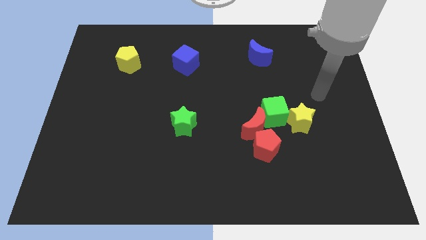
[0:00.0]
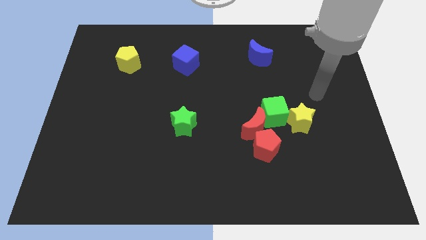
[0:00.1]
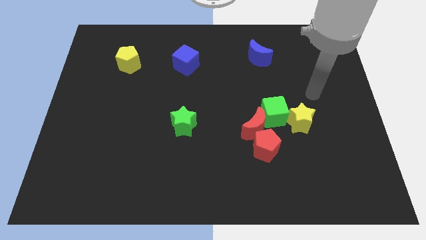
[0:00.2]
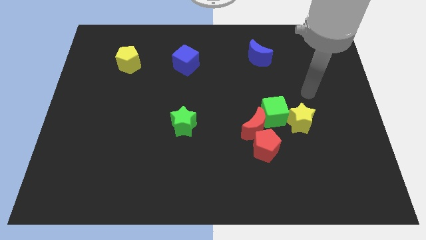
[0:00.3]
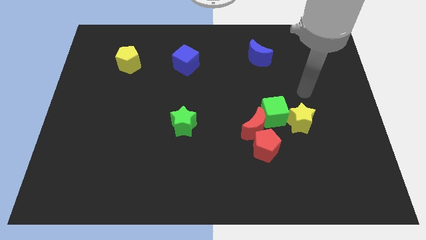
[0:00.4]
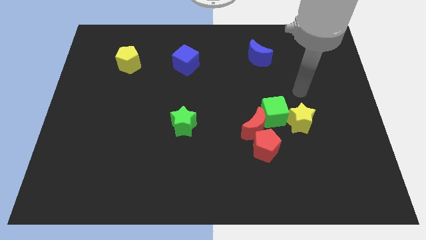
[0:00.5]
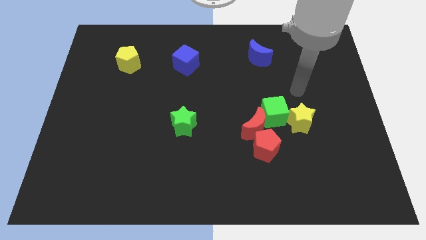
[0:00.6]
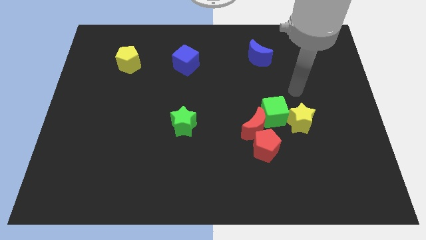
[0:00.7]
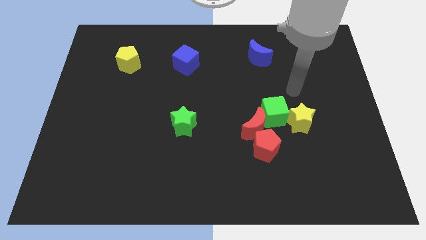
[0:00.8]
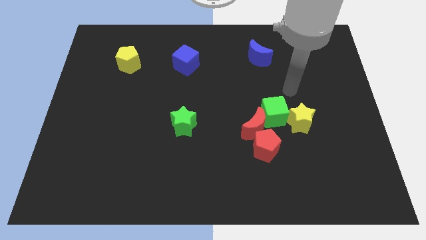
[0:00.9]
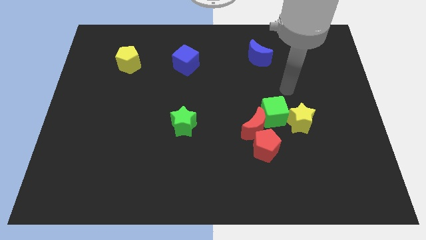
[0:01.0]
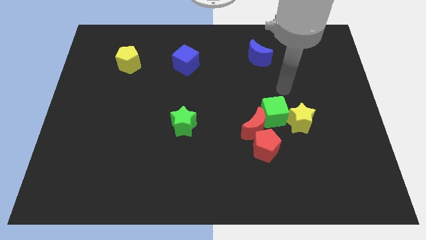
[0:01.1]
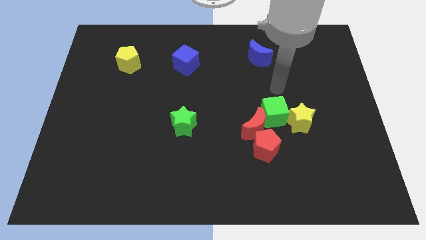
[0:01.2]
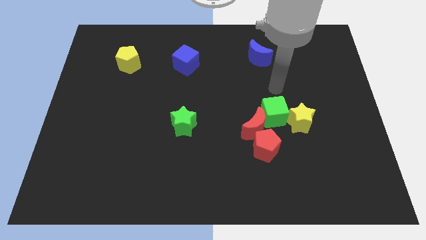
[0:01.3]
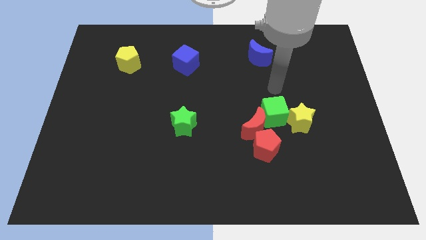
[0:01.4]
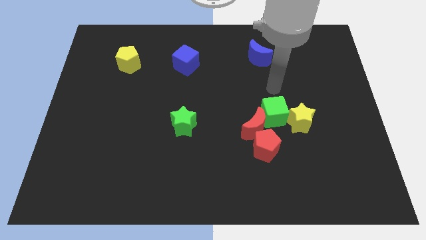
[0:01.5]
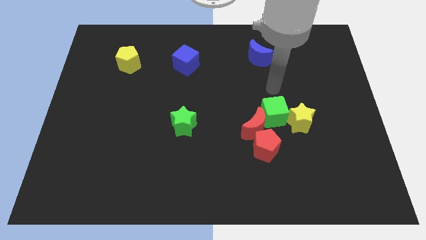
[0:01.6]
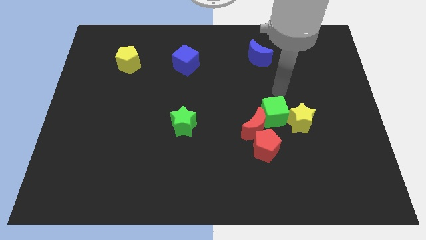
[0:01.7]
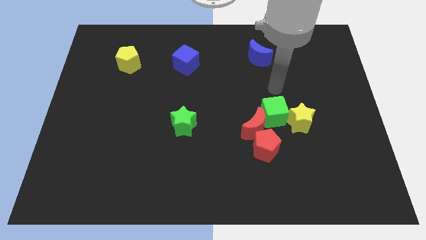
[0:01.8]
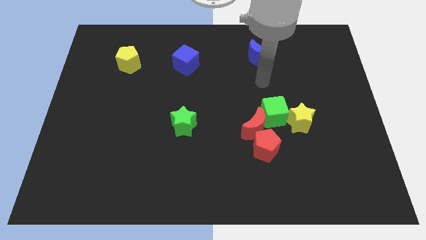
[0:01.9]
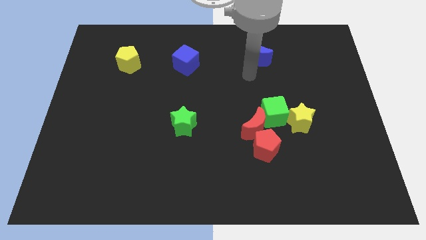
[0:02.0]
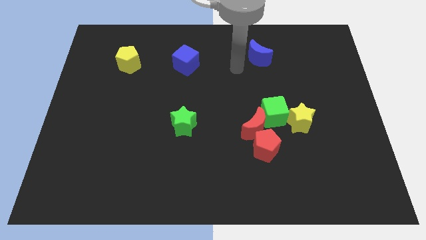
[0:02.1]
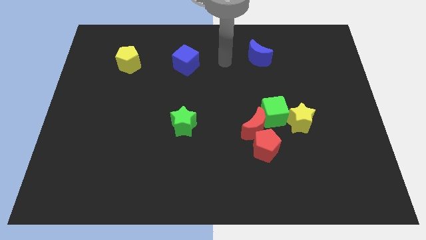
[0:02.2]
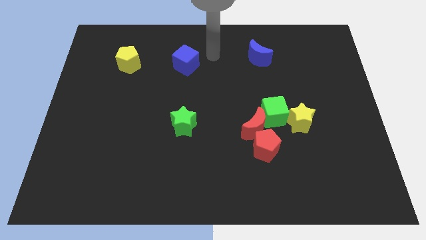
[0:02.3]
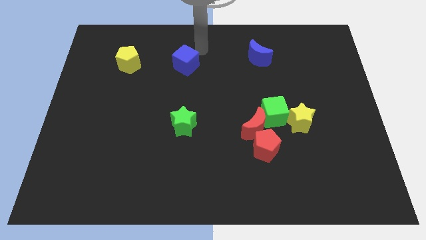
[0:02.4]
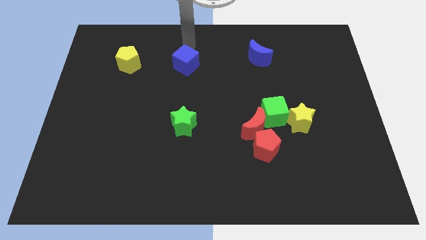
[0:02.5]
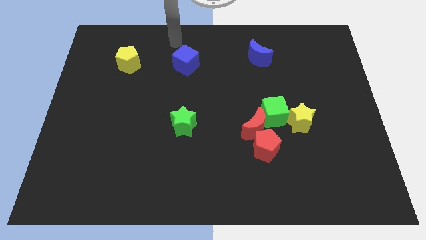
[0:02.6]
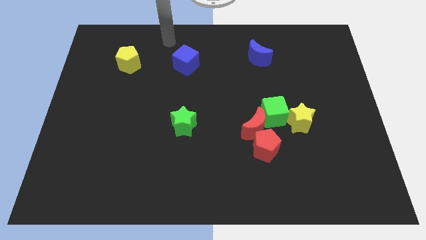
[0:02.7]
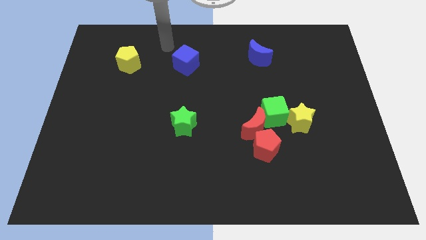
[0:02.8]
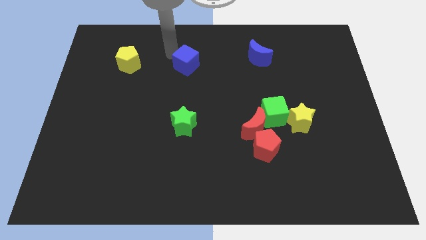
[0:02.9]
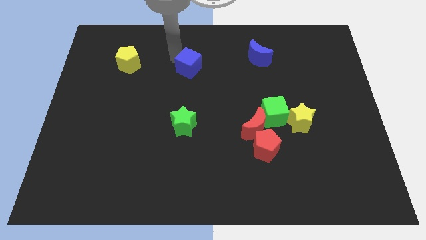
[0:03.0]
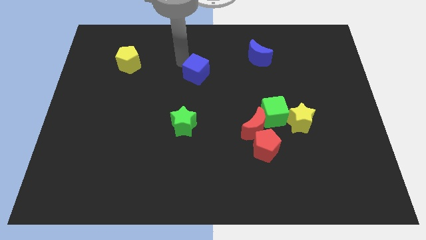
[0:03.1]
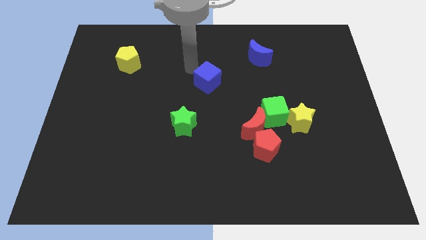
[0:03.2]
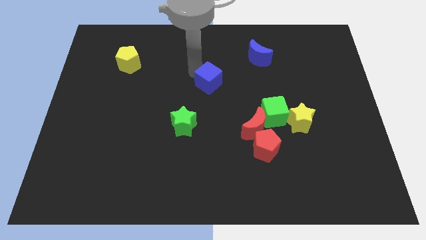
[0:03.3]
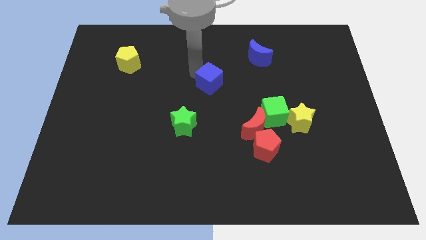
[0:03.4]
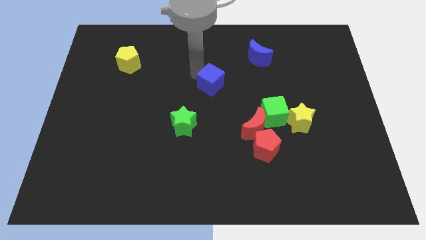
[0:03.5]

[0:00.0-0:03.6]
move the blue cube diagonal to the green star

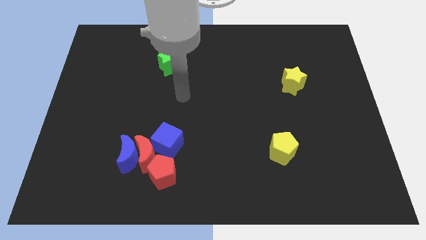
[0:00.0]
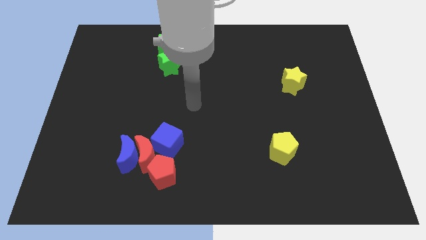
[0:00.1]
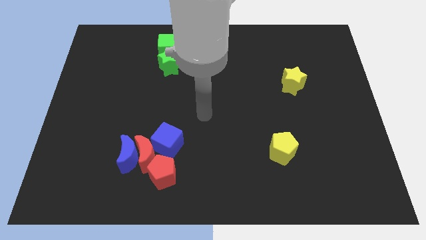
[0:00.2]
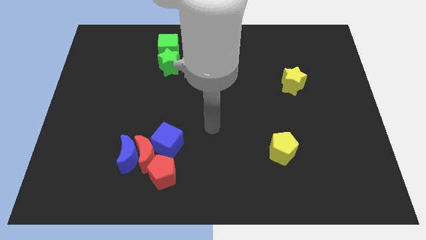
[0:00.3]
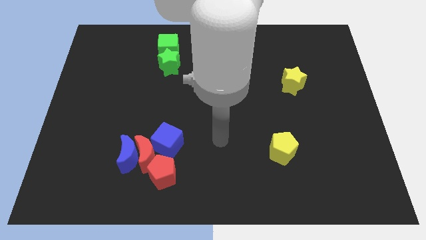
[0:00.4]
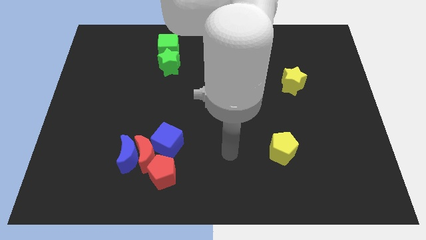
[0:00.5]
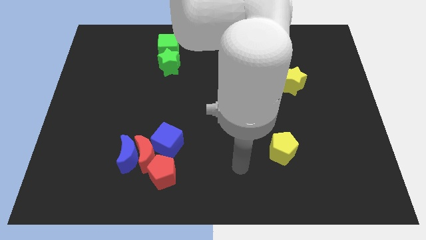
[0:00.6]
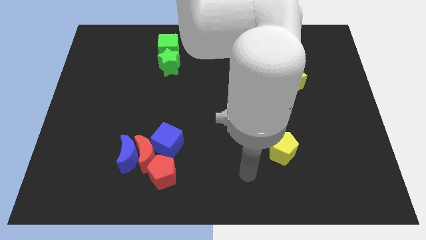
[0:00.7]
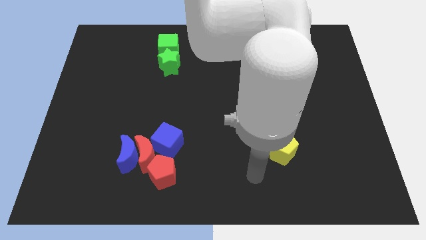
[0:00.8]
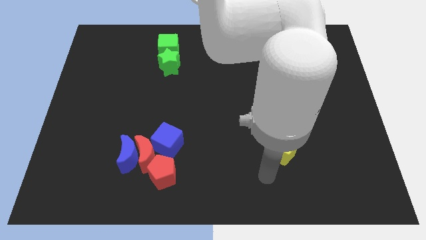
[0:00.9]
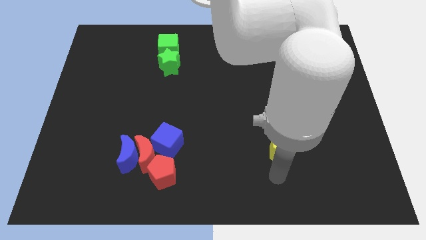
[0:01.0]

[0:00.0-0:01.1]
move the arm to the bottom of the yellow pentagon

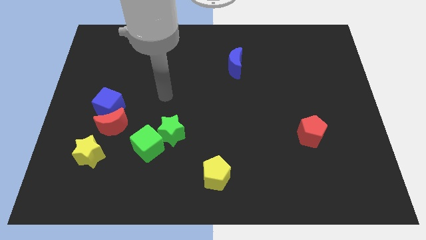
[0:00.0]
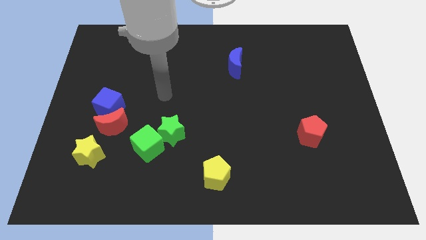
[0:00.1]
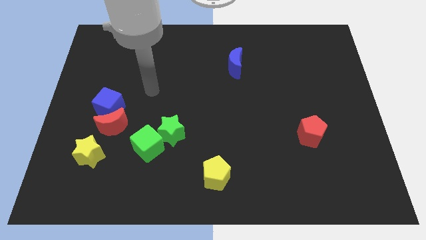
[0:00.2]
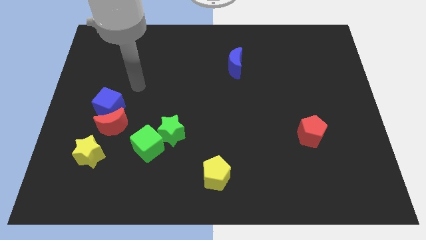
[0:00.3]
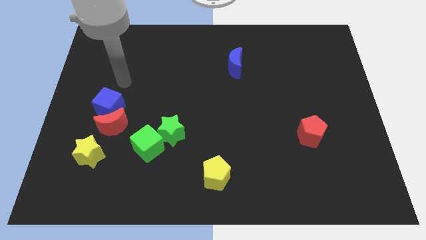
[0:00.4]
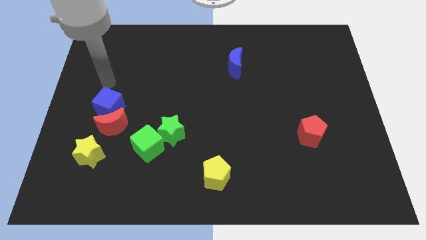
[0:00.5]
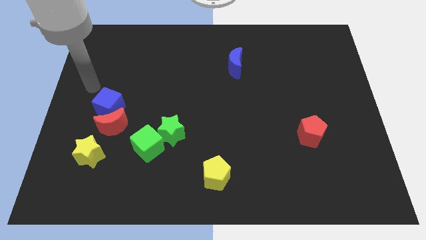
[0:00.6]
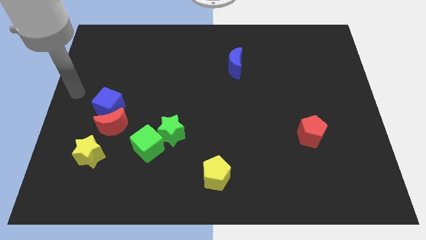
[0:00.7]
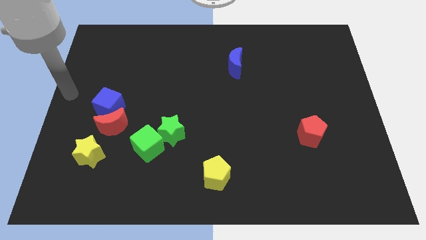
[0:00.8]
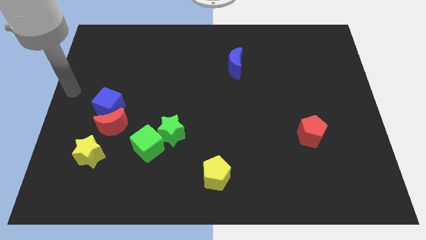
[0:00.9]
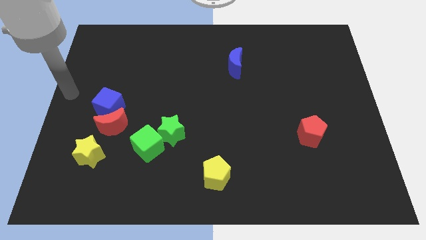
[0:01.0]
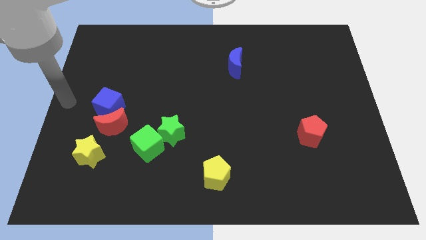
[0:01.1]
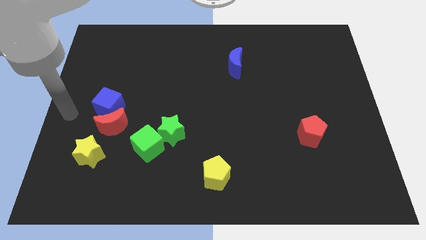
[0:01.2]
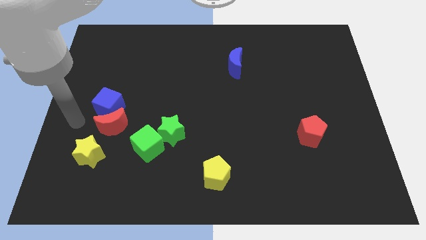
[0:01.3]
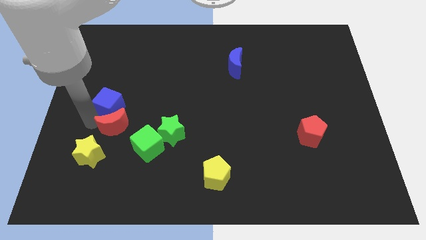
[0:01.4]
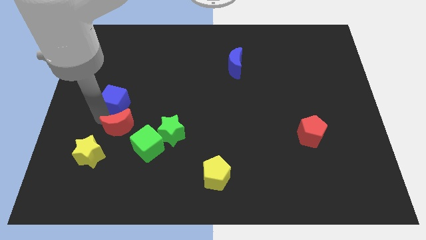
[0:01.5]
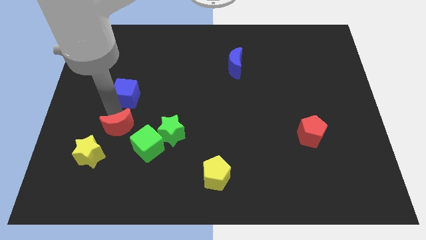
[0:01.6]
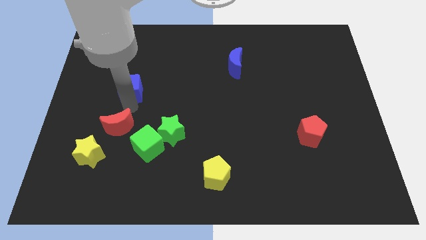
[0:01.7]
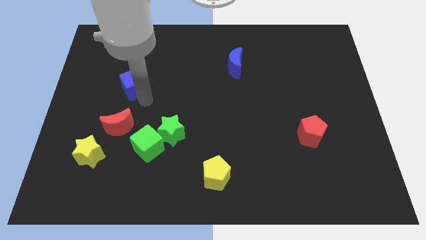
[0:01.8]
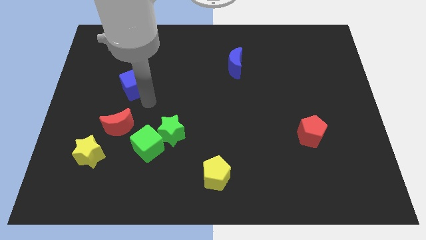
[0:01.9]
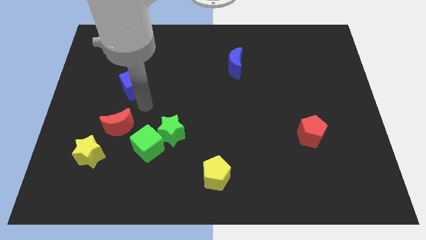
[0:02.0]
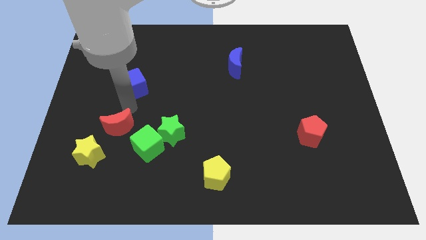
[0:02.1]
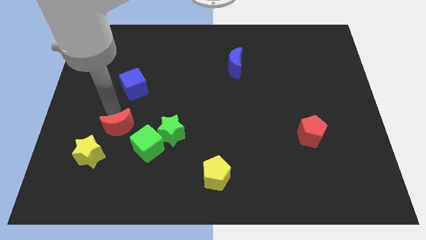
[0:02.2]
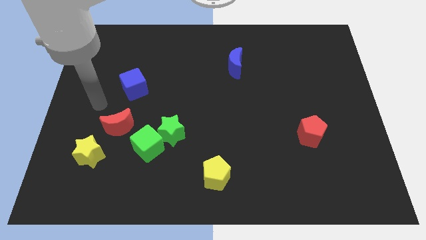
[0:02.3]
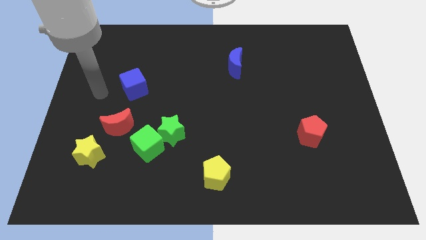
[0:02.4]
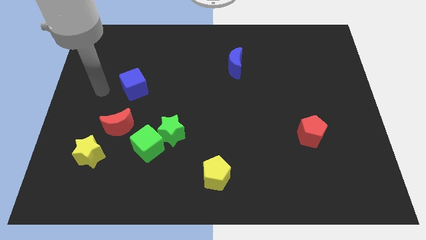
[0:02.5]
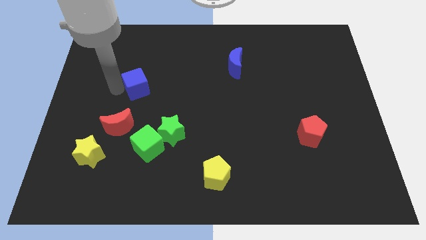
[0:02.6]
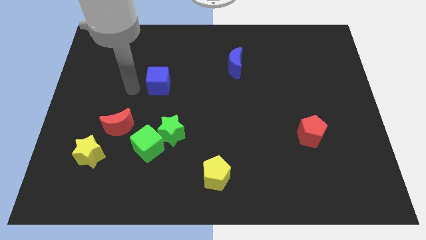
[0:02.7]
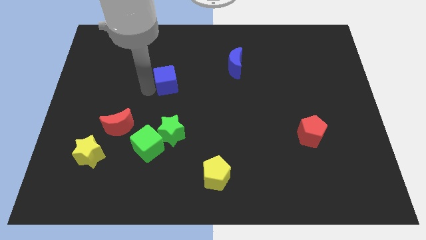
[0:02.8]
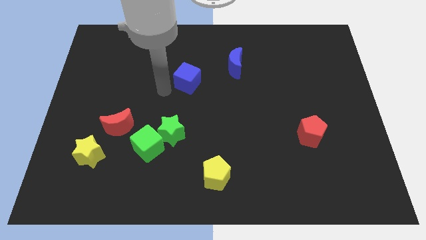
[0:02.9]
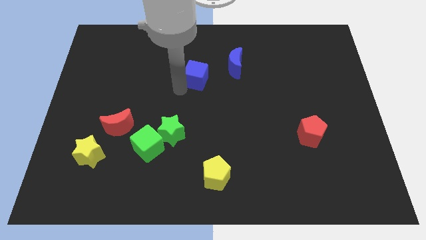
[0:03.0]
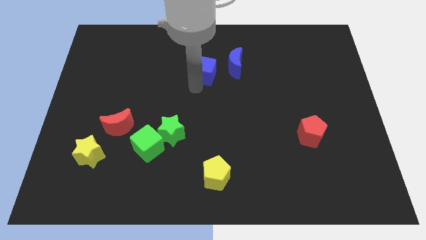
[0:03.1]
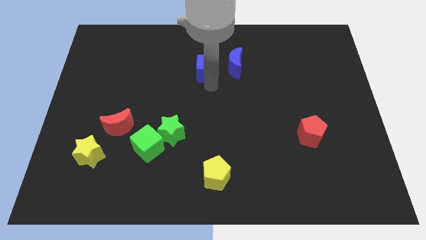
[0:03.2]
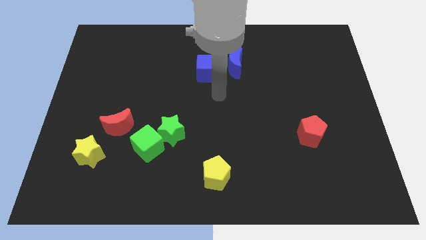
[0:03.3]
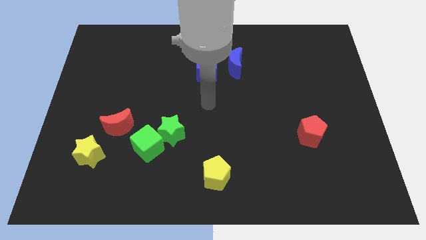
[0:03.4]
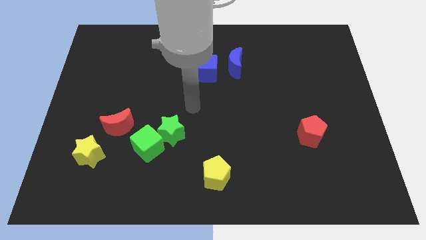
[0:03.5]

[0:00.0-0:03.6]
move the blue cube to the left side of the blue moon

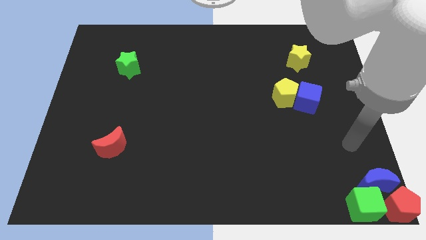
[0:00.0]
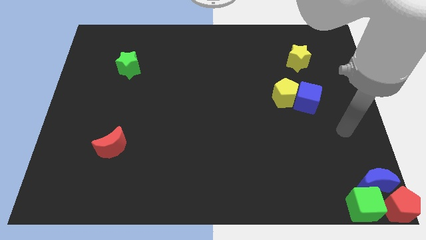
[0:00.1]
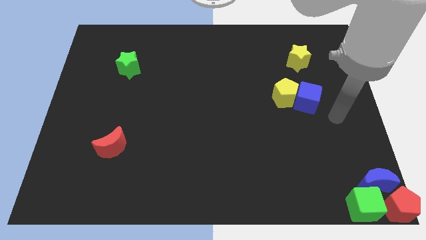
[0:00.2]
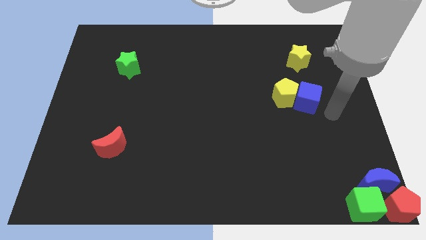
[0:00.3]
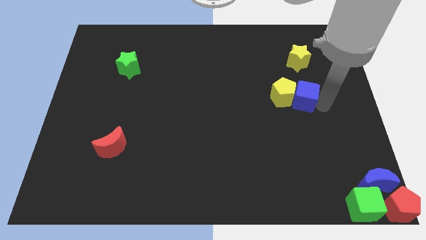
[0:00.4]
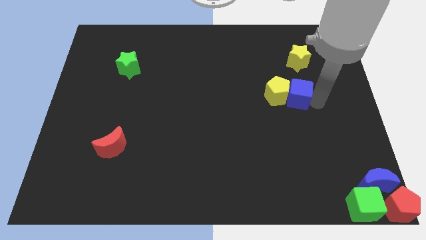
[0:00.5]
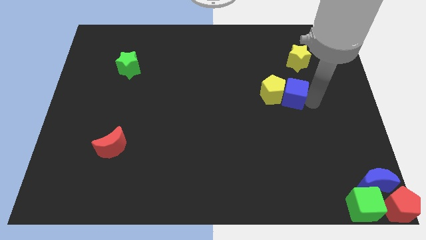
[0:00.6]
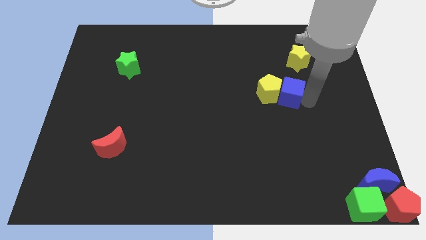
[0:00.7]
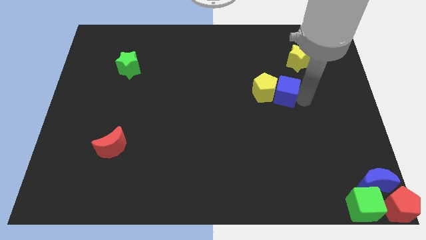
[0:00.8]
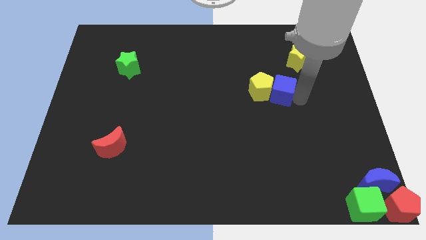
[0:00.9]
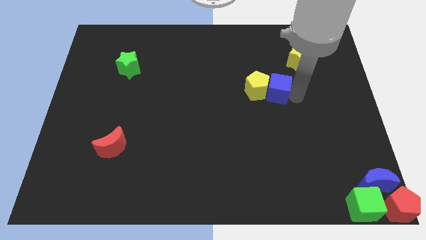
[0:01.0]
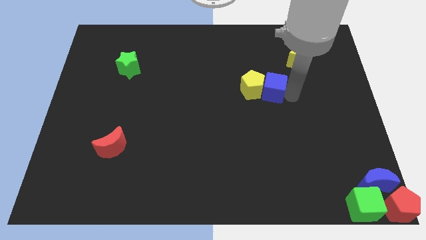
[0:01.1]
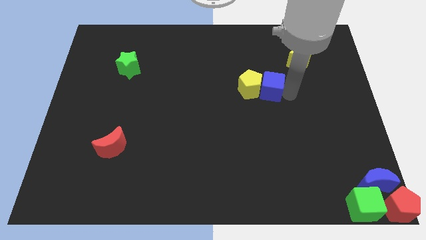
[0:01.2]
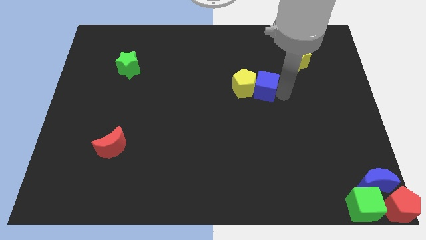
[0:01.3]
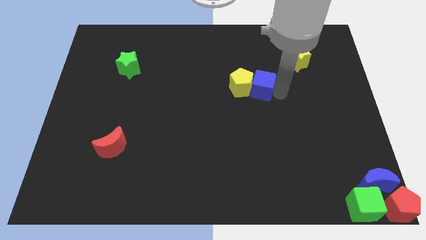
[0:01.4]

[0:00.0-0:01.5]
push the blue cube along with the yellow pentagon to the left side
